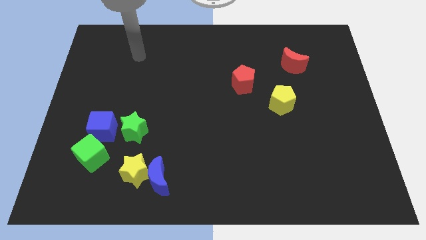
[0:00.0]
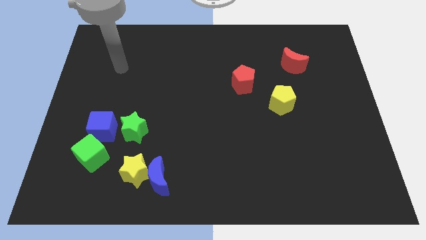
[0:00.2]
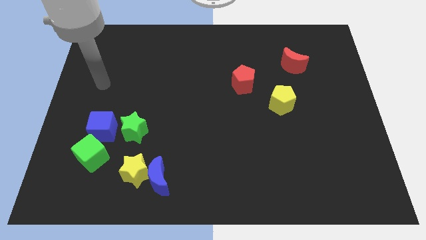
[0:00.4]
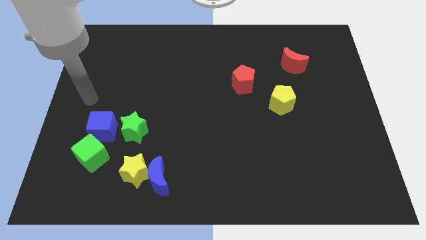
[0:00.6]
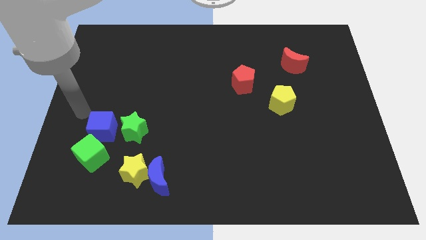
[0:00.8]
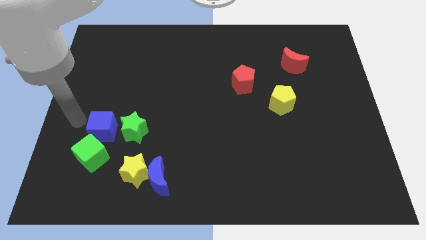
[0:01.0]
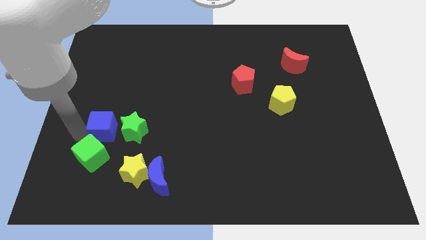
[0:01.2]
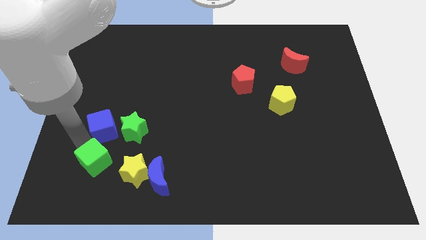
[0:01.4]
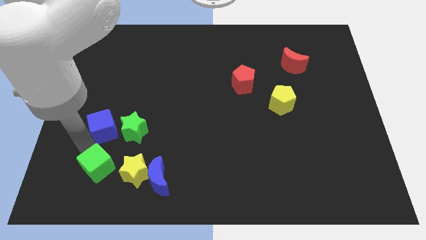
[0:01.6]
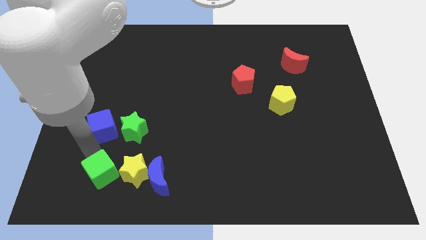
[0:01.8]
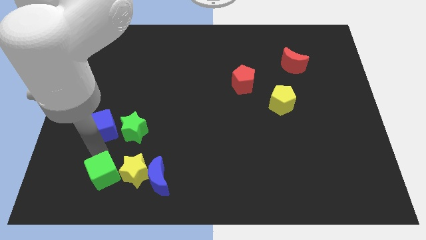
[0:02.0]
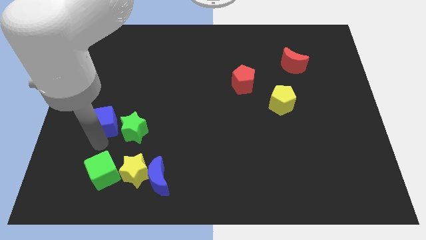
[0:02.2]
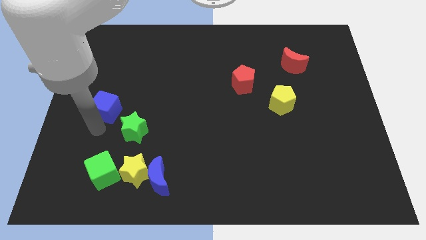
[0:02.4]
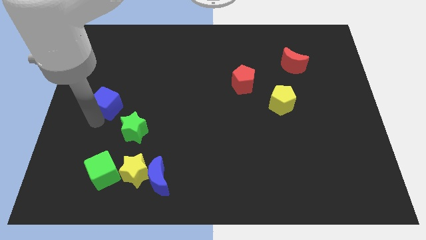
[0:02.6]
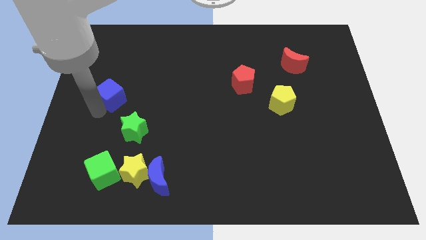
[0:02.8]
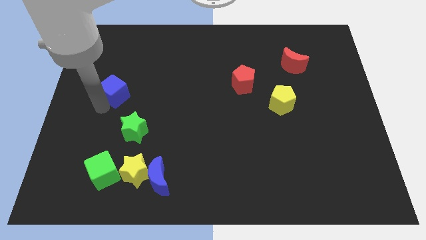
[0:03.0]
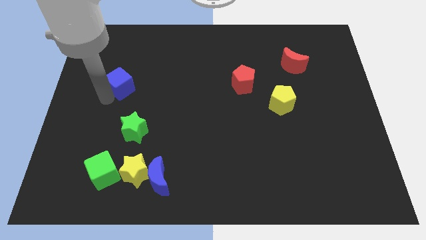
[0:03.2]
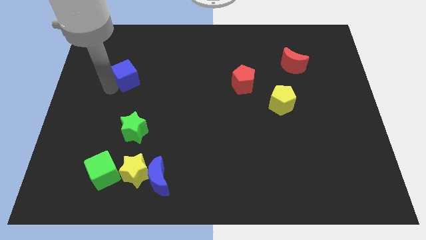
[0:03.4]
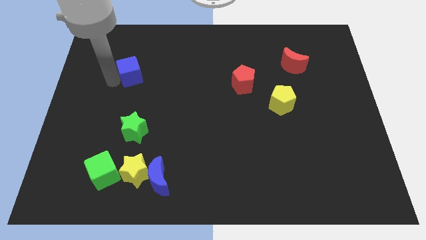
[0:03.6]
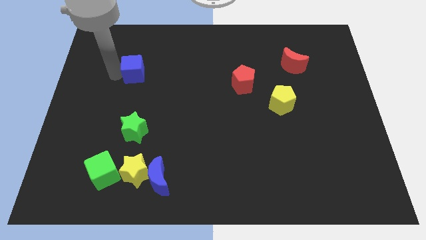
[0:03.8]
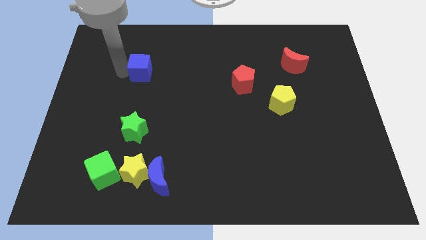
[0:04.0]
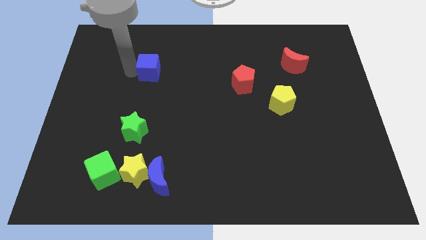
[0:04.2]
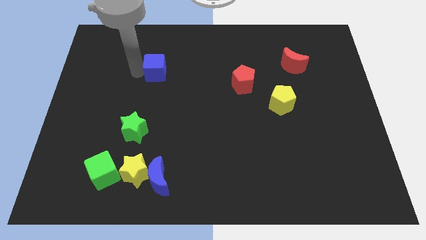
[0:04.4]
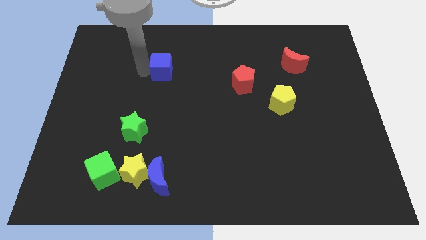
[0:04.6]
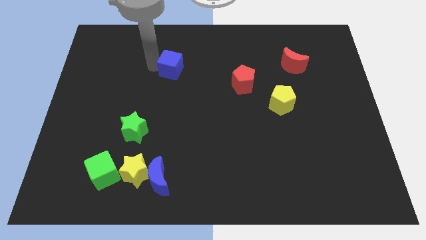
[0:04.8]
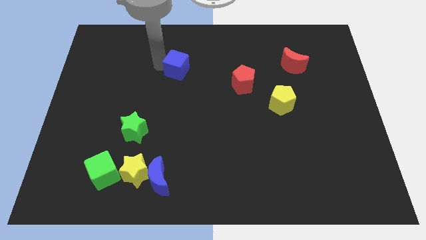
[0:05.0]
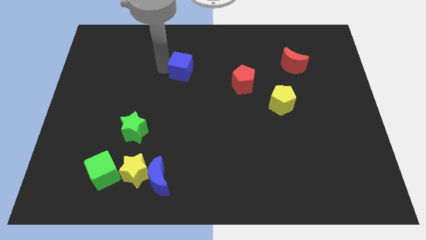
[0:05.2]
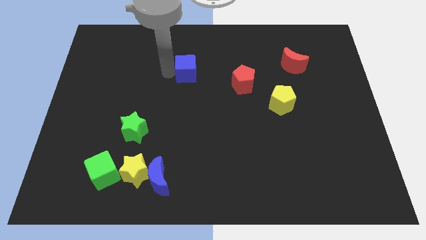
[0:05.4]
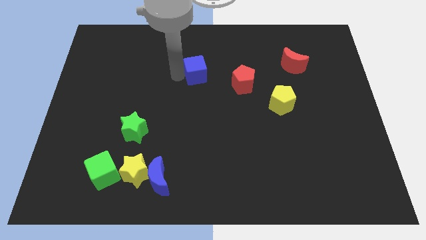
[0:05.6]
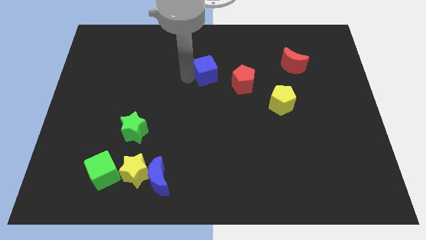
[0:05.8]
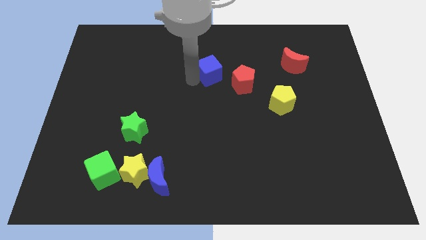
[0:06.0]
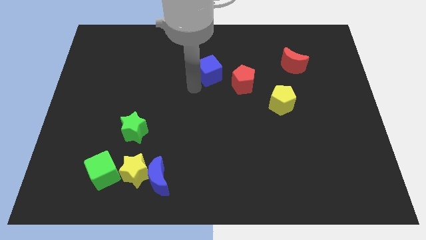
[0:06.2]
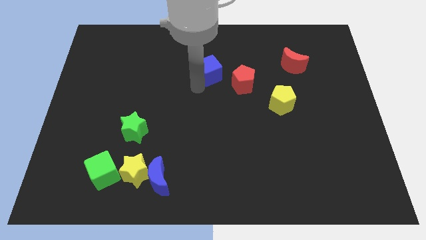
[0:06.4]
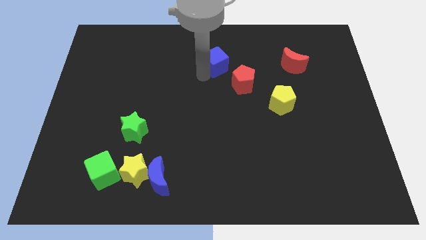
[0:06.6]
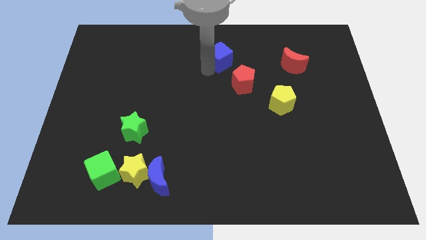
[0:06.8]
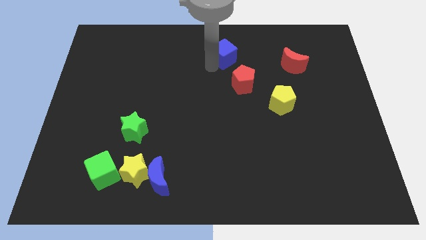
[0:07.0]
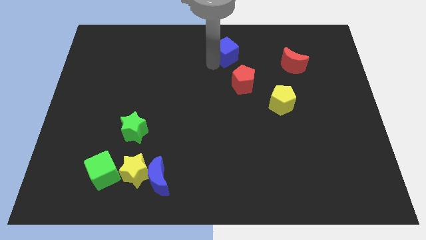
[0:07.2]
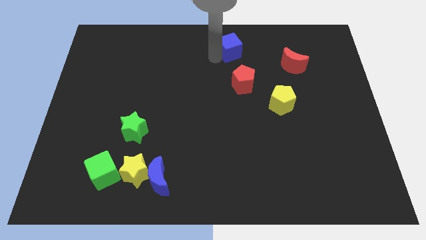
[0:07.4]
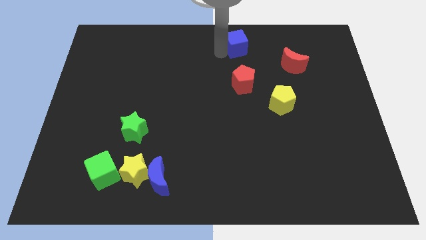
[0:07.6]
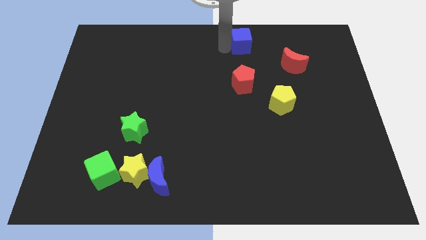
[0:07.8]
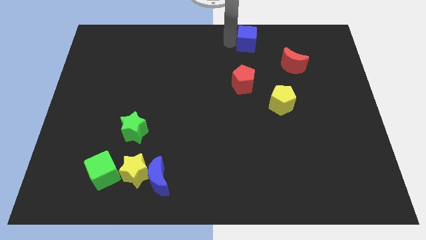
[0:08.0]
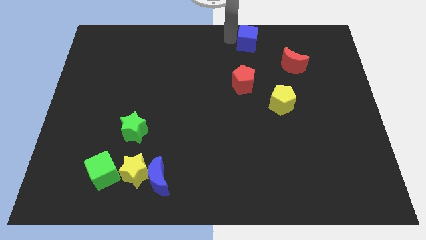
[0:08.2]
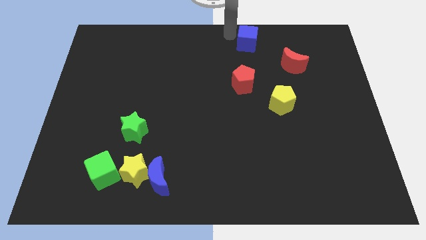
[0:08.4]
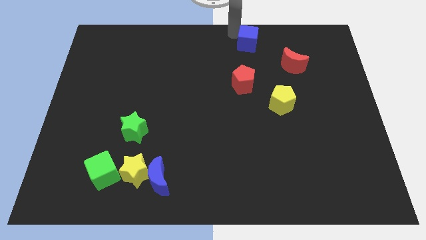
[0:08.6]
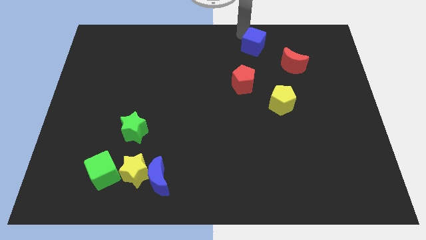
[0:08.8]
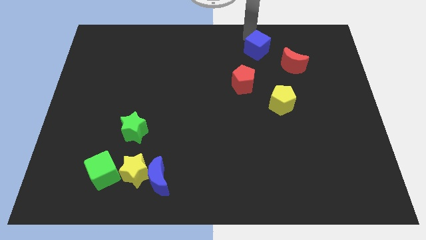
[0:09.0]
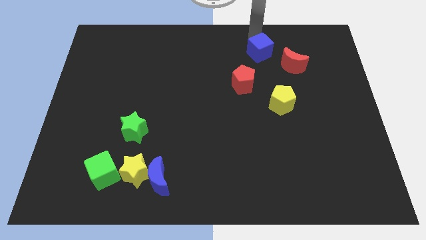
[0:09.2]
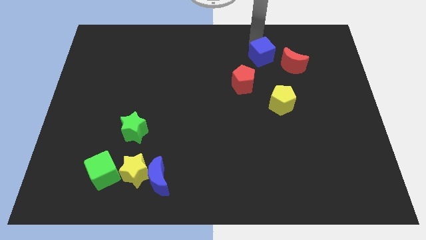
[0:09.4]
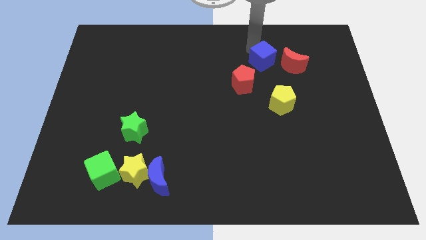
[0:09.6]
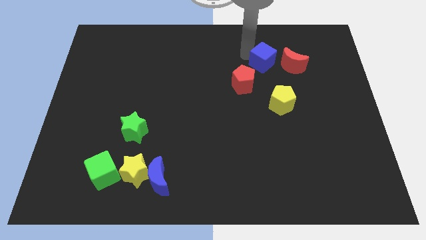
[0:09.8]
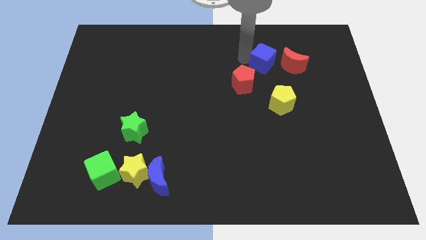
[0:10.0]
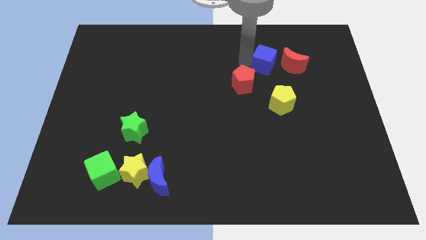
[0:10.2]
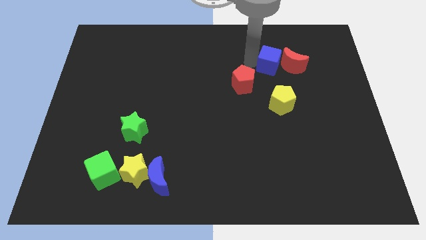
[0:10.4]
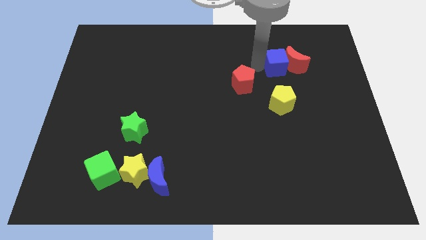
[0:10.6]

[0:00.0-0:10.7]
put the blue cube close to the red moon

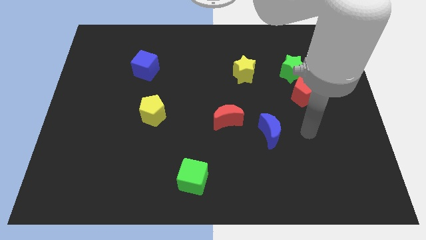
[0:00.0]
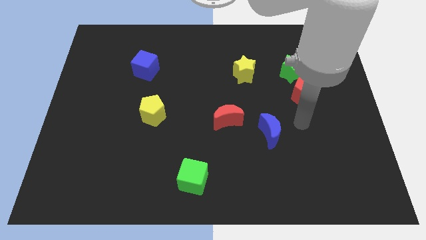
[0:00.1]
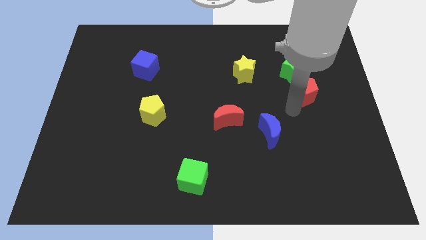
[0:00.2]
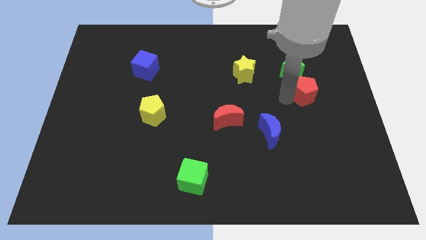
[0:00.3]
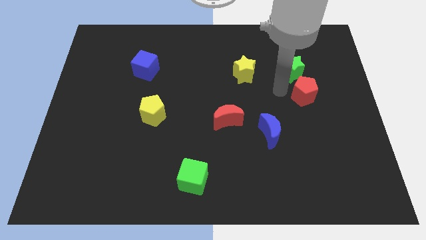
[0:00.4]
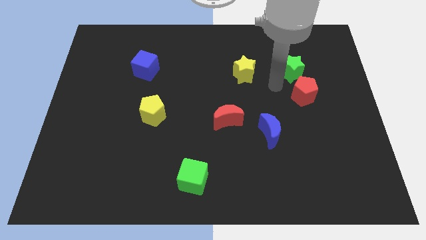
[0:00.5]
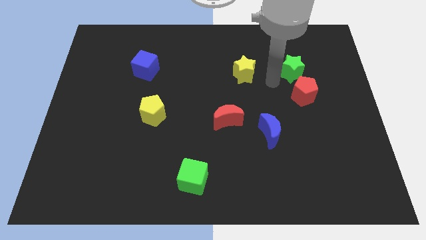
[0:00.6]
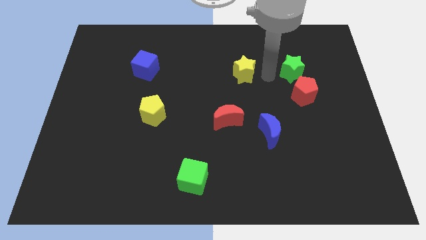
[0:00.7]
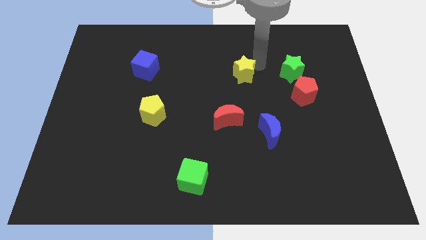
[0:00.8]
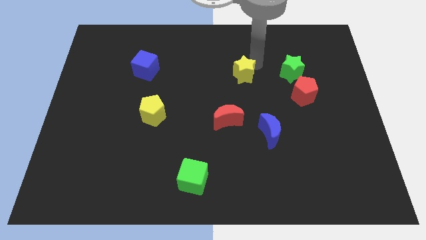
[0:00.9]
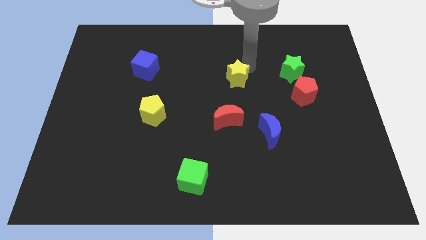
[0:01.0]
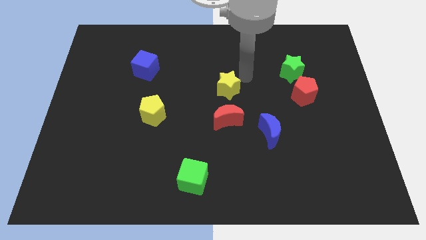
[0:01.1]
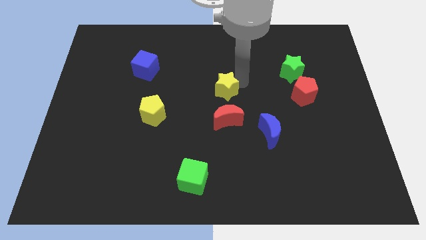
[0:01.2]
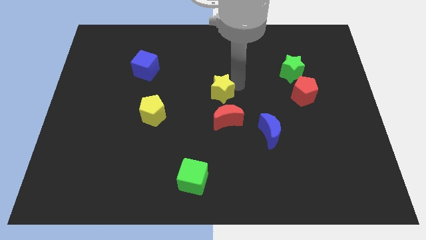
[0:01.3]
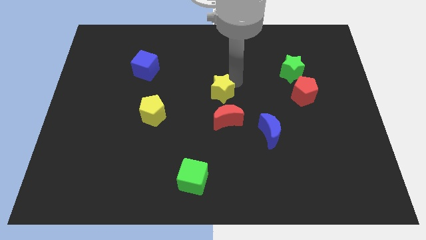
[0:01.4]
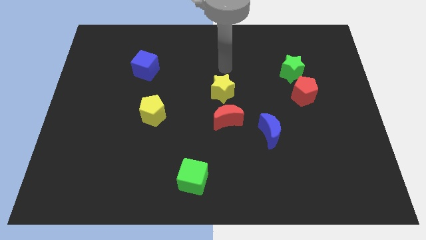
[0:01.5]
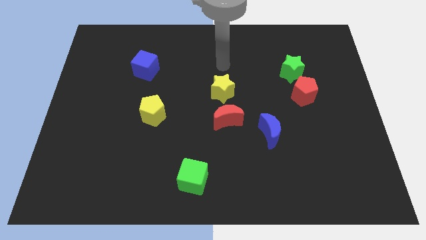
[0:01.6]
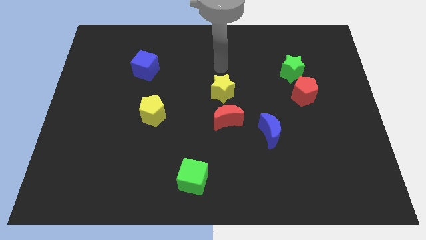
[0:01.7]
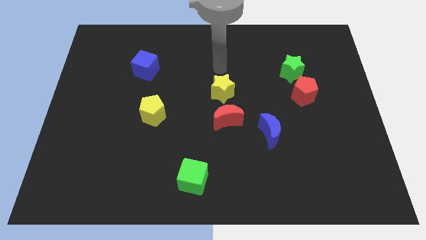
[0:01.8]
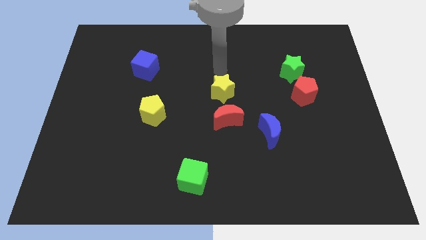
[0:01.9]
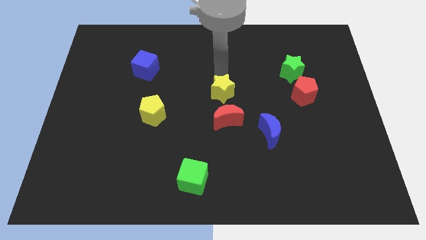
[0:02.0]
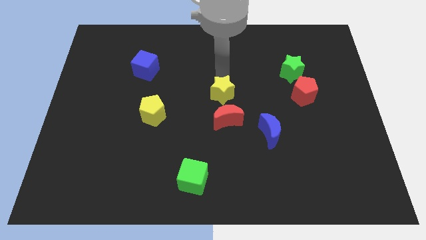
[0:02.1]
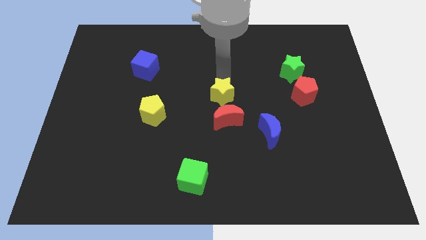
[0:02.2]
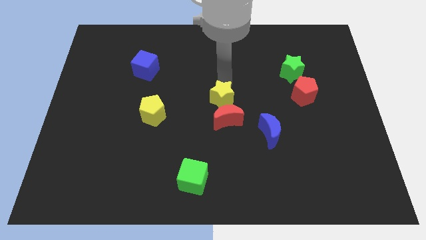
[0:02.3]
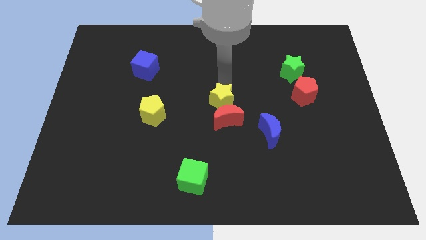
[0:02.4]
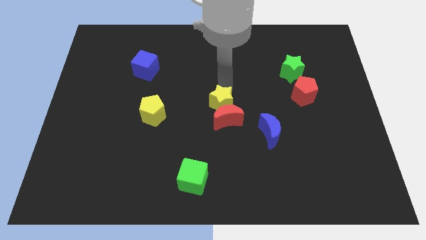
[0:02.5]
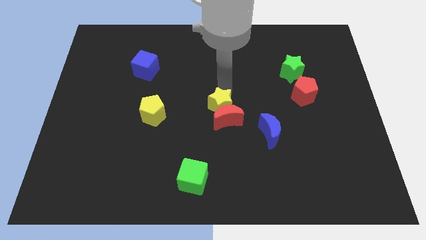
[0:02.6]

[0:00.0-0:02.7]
push the yellow star to the red moon

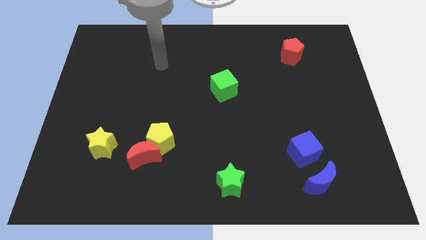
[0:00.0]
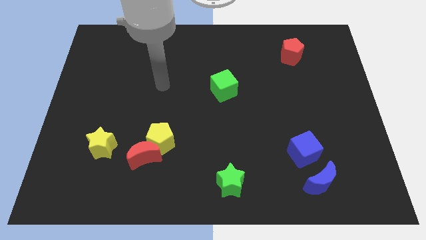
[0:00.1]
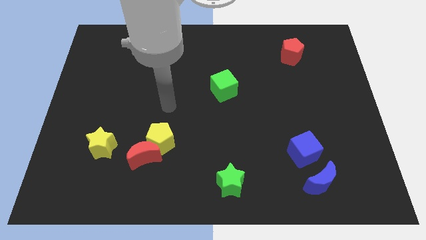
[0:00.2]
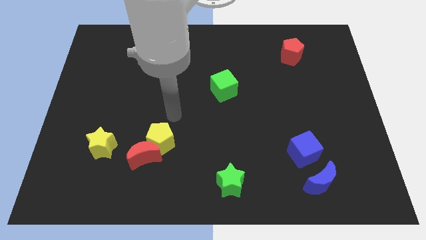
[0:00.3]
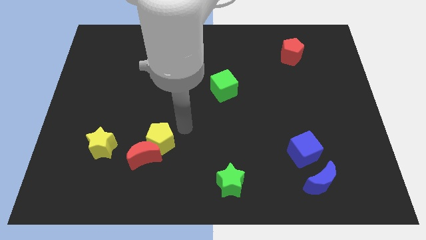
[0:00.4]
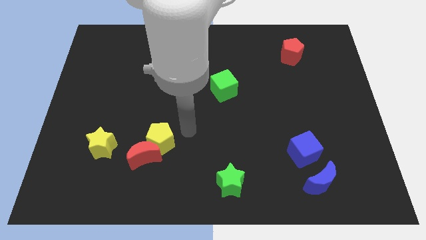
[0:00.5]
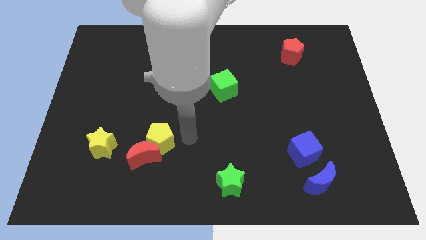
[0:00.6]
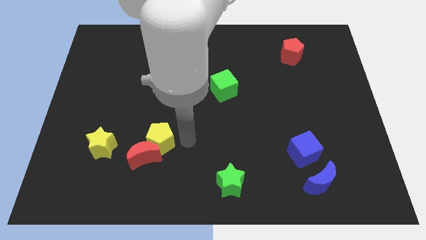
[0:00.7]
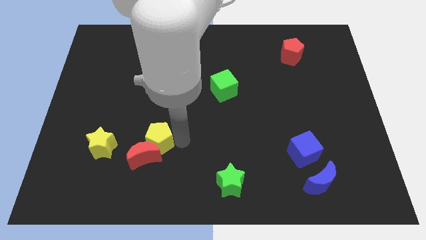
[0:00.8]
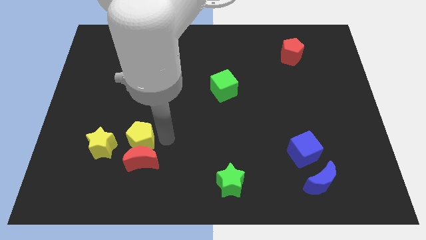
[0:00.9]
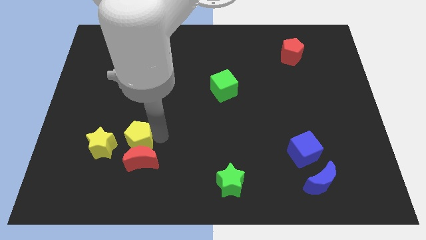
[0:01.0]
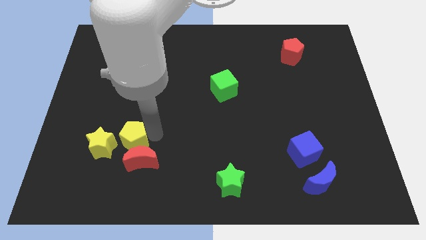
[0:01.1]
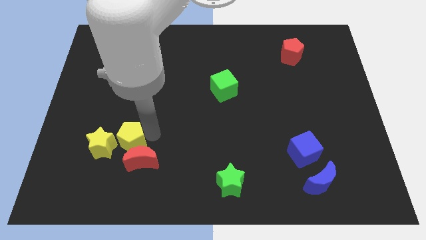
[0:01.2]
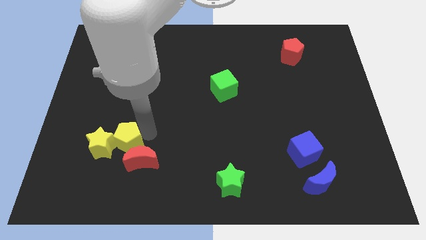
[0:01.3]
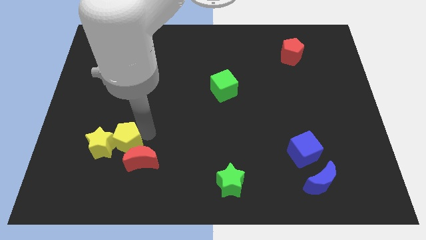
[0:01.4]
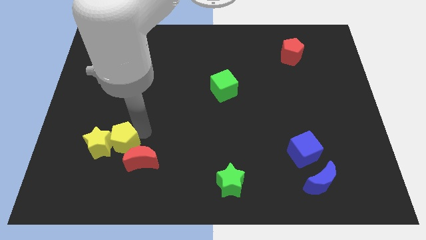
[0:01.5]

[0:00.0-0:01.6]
slide the yellow pentagon close to the yellow star
